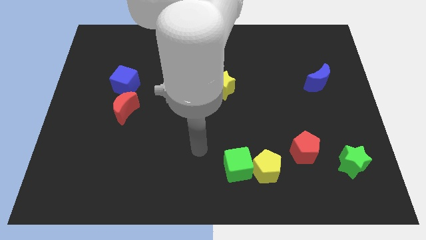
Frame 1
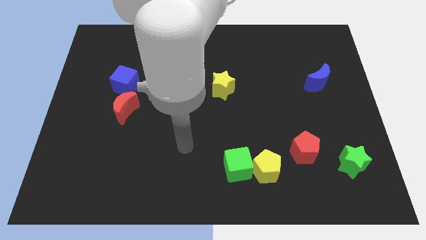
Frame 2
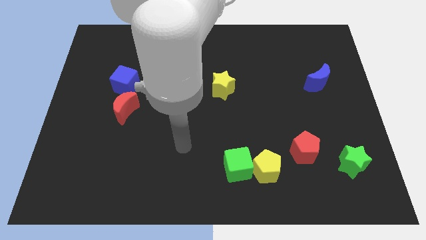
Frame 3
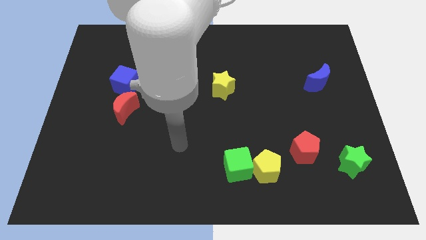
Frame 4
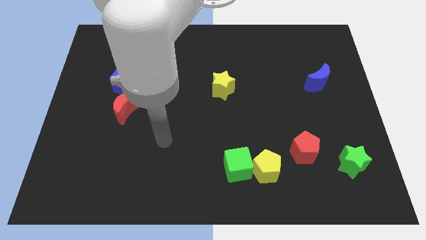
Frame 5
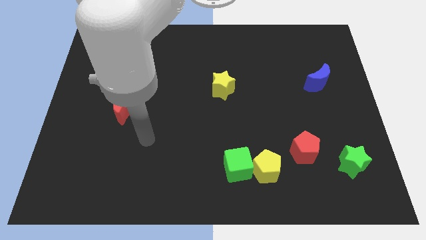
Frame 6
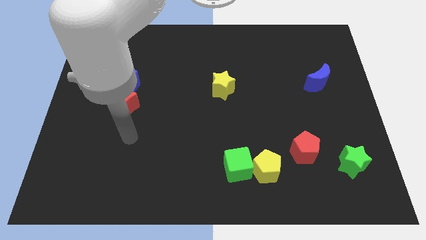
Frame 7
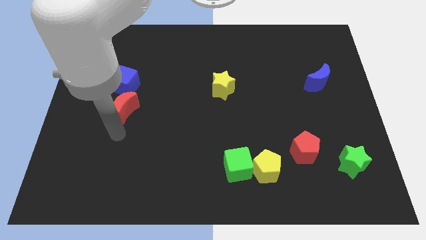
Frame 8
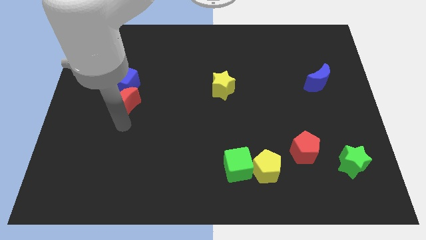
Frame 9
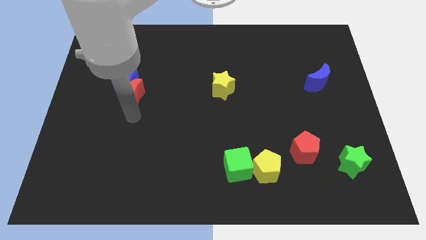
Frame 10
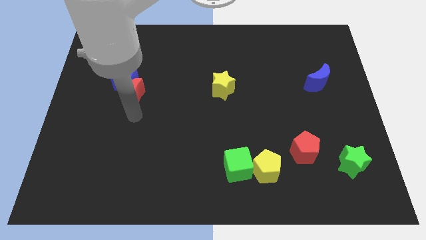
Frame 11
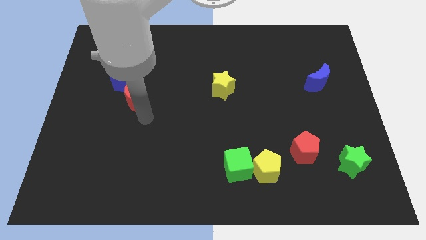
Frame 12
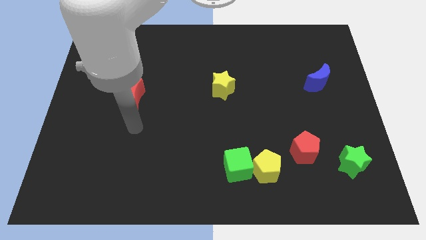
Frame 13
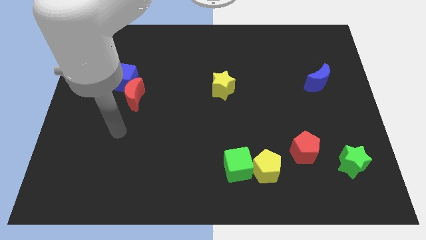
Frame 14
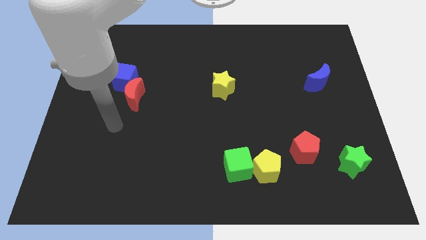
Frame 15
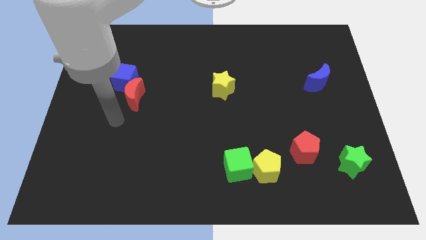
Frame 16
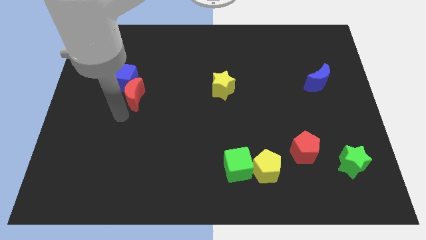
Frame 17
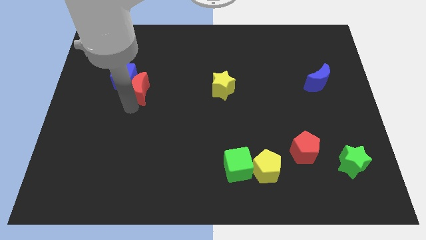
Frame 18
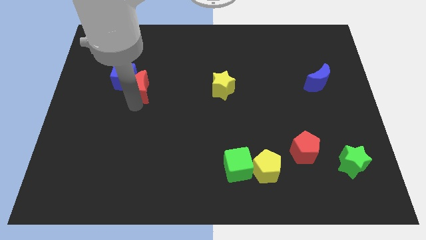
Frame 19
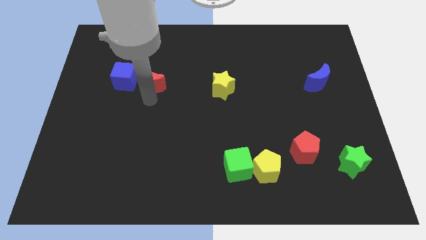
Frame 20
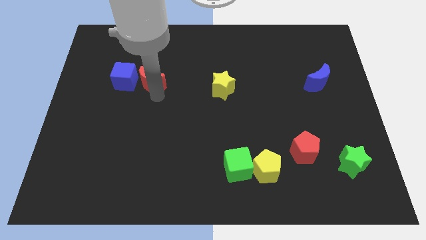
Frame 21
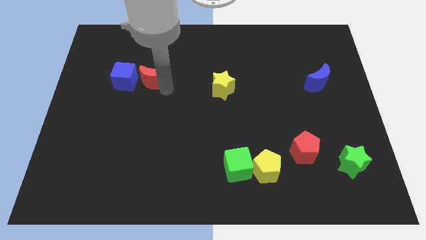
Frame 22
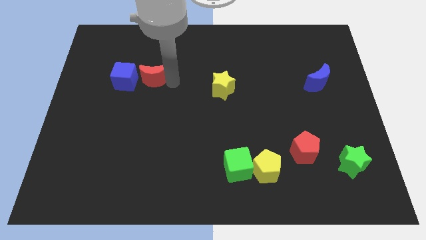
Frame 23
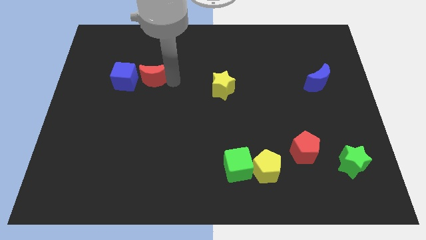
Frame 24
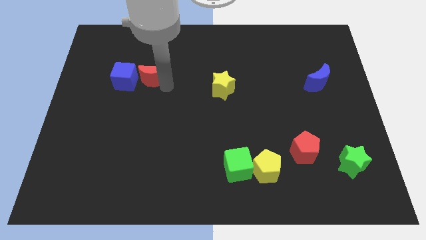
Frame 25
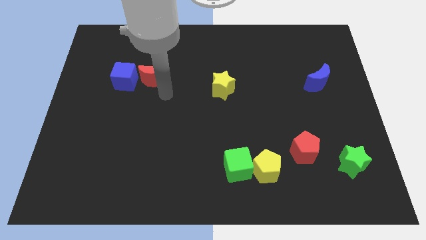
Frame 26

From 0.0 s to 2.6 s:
place the red crescent to the right side of the blue cube

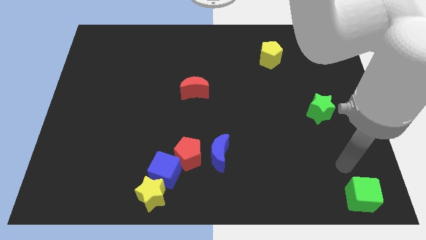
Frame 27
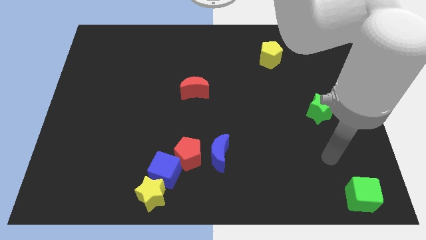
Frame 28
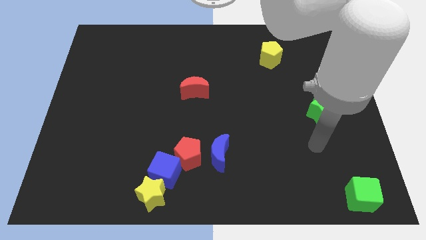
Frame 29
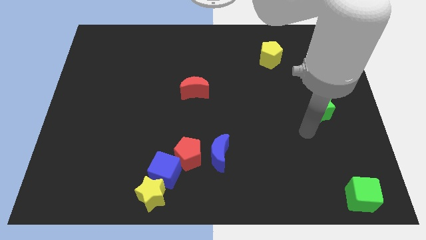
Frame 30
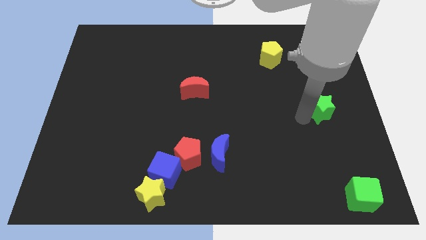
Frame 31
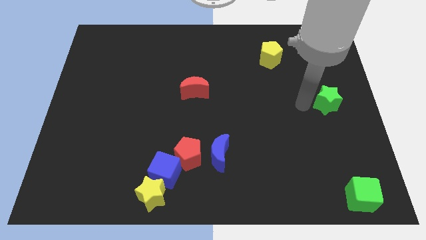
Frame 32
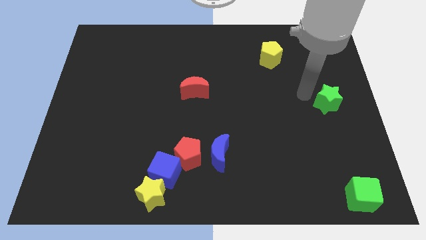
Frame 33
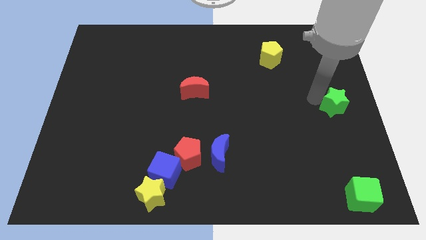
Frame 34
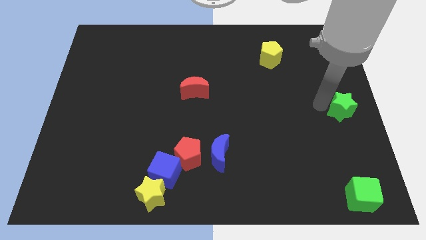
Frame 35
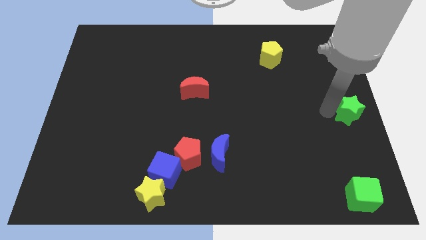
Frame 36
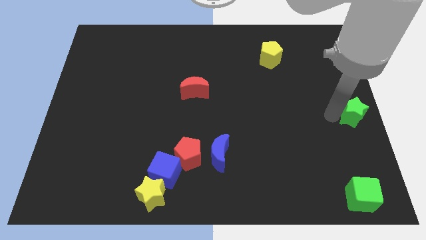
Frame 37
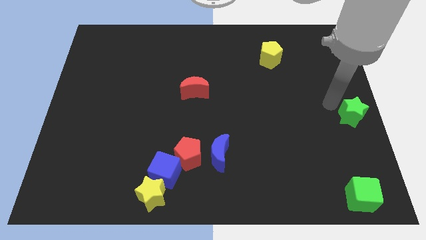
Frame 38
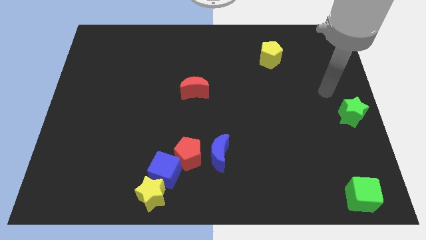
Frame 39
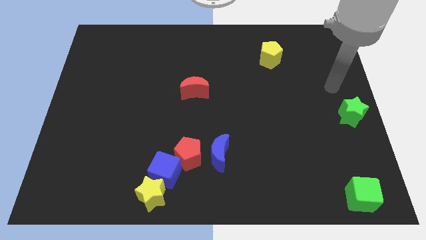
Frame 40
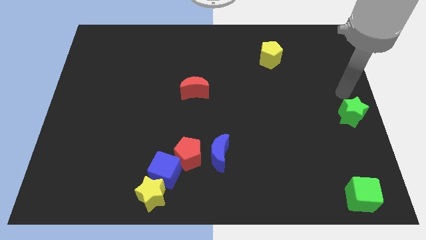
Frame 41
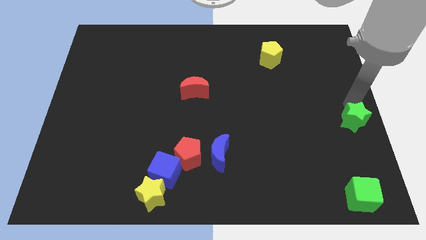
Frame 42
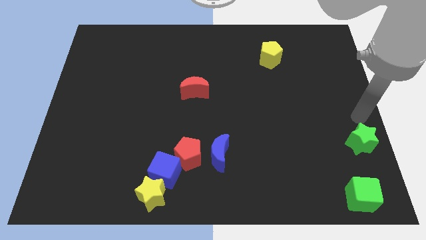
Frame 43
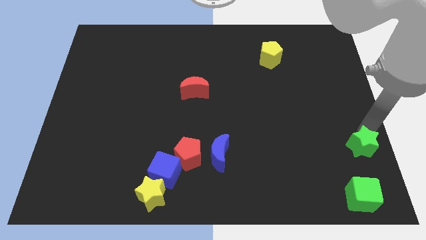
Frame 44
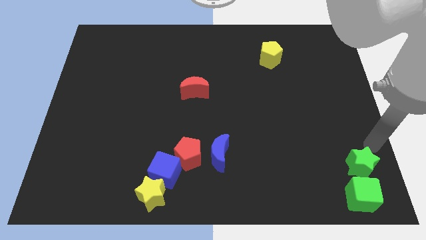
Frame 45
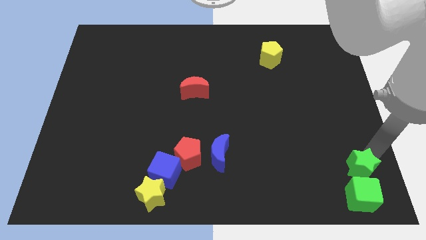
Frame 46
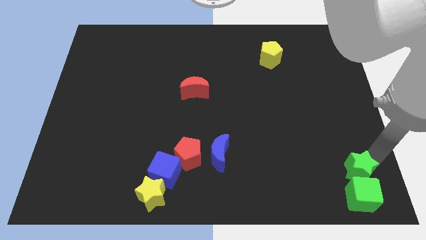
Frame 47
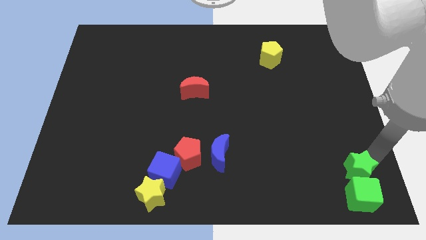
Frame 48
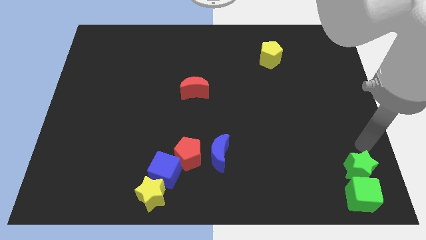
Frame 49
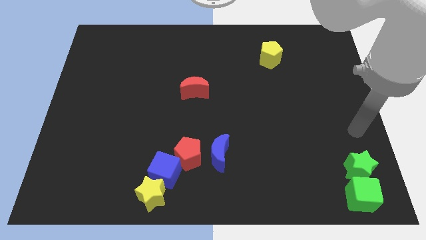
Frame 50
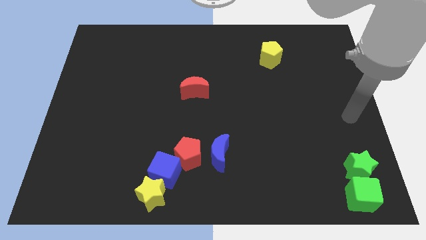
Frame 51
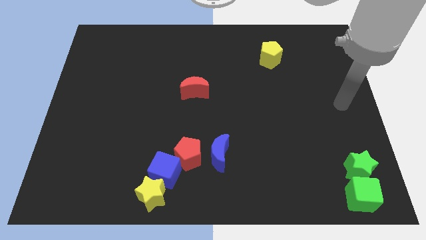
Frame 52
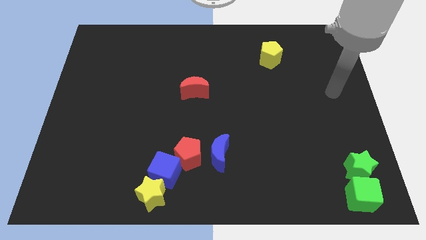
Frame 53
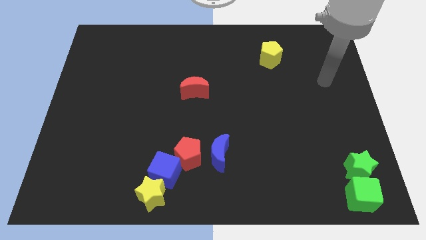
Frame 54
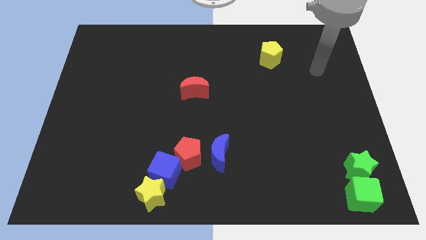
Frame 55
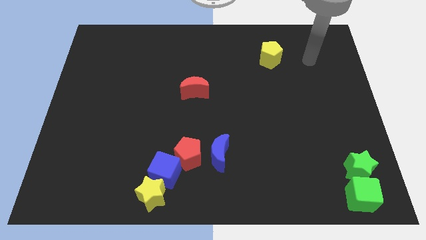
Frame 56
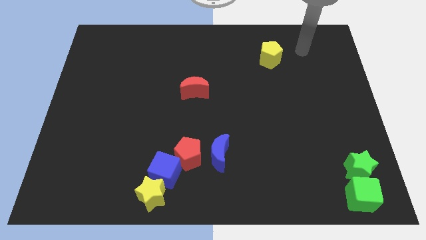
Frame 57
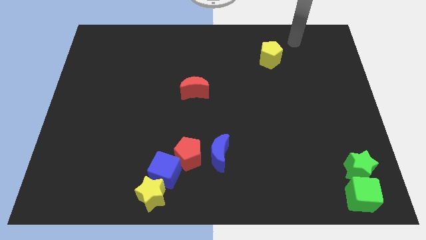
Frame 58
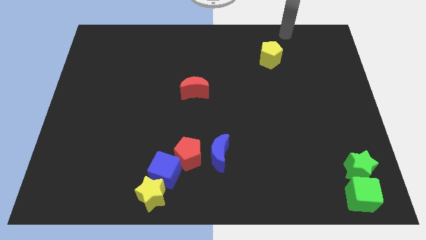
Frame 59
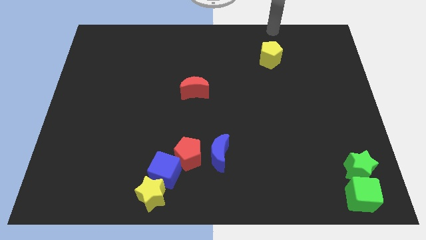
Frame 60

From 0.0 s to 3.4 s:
push the green star closer to the green cube

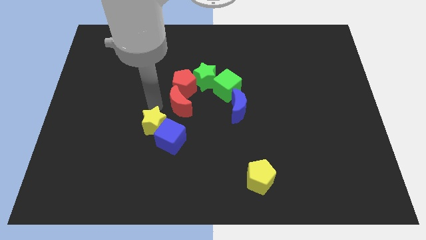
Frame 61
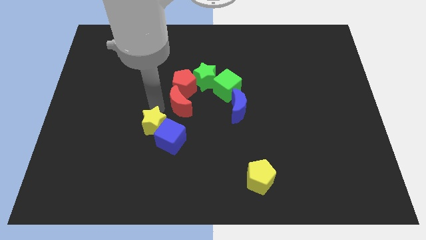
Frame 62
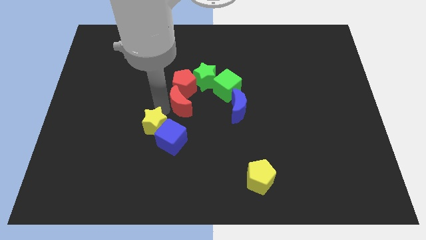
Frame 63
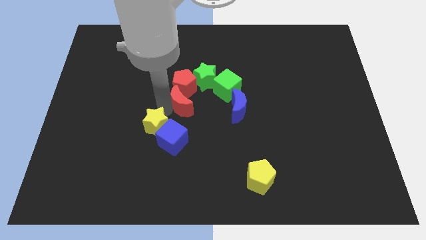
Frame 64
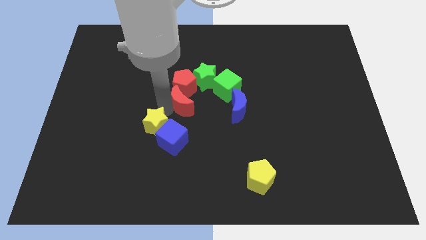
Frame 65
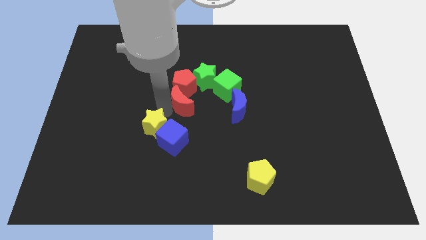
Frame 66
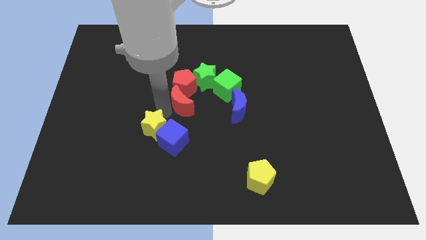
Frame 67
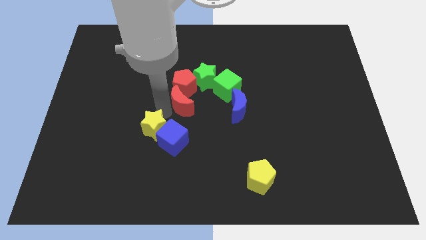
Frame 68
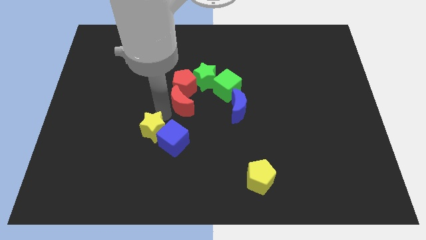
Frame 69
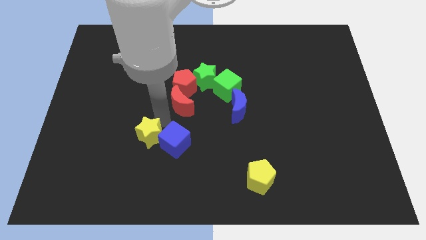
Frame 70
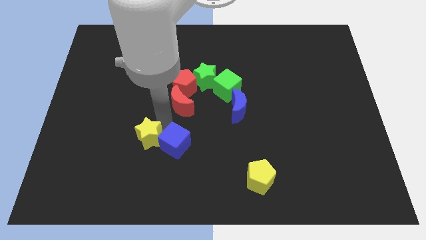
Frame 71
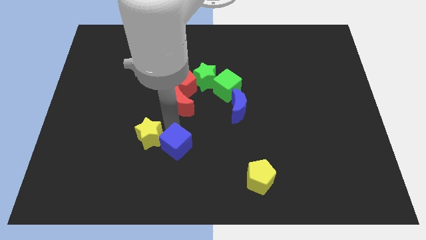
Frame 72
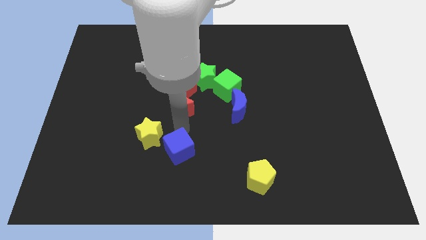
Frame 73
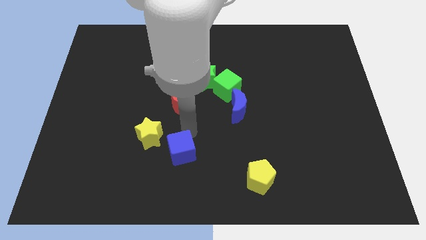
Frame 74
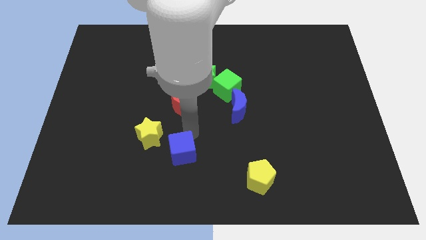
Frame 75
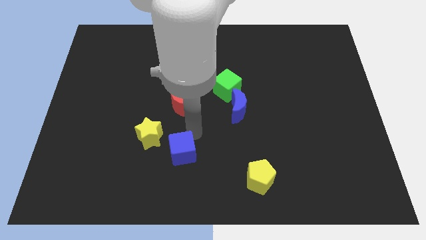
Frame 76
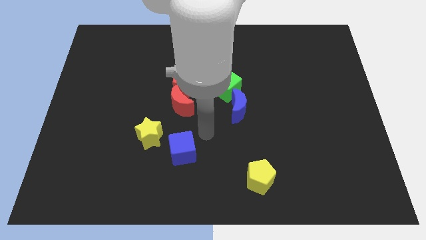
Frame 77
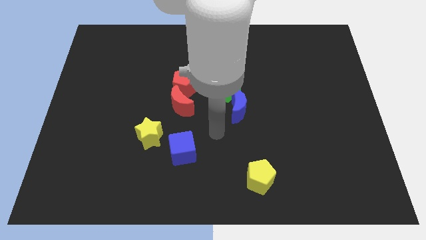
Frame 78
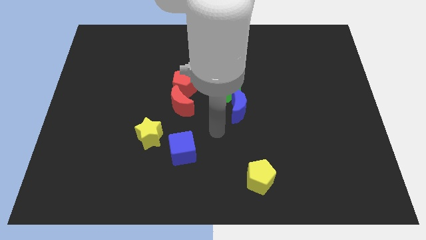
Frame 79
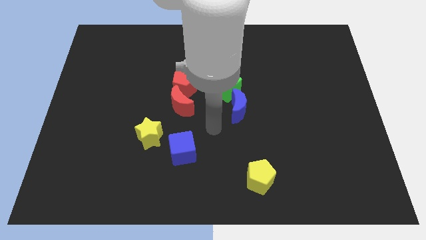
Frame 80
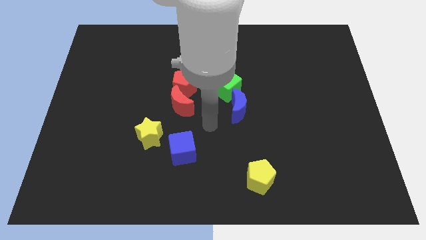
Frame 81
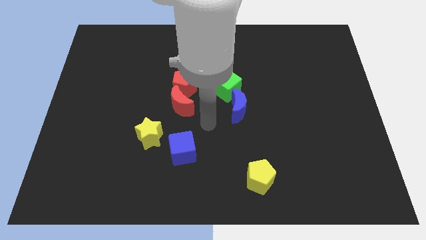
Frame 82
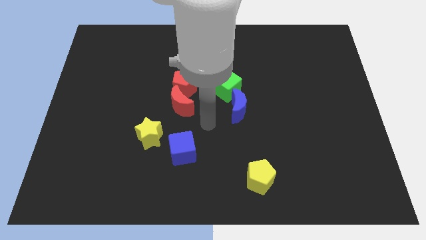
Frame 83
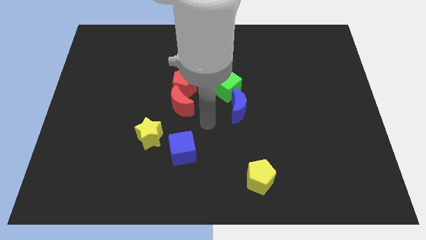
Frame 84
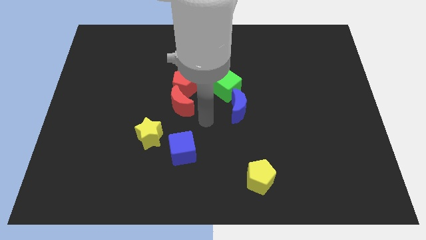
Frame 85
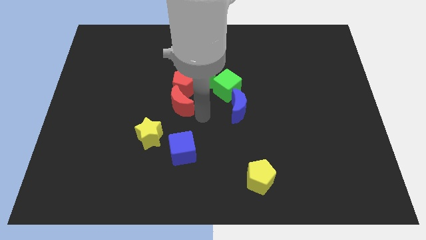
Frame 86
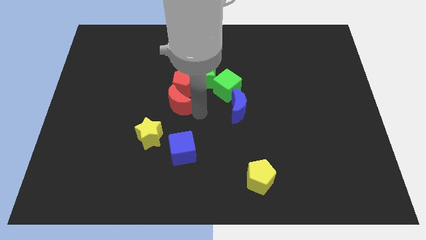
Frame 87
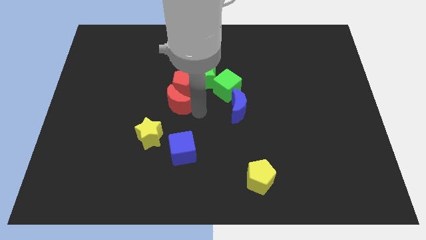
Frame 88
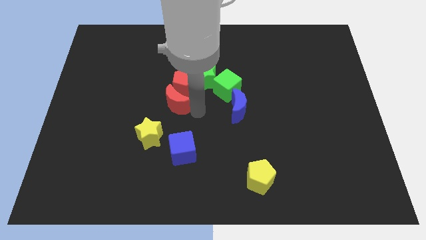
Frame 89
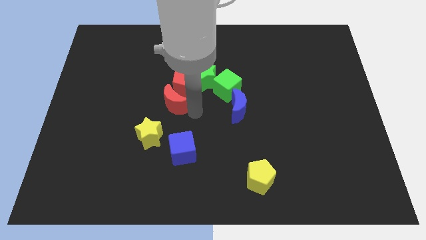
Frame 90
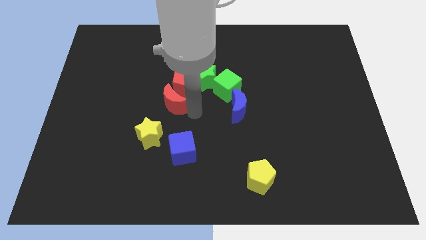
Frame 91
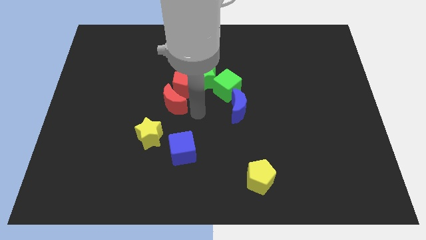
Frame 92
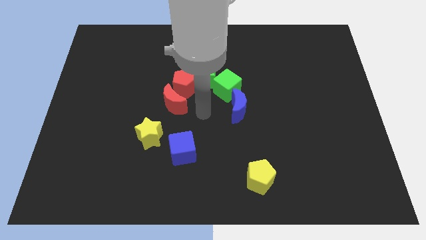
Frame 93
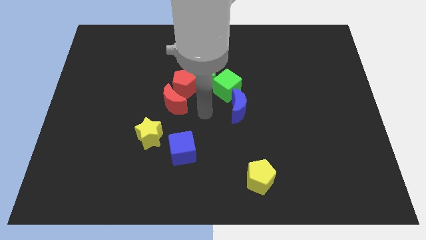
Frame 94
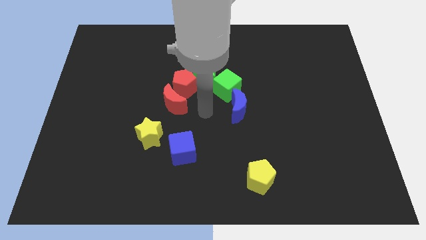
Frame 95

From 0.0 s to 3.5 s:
separate the yellow star and the blue cube
